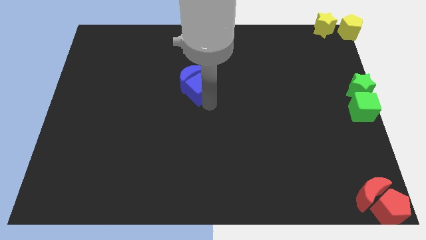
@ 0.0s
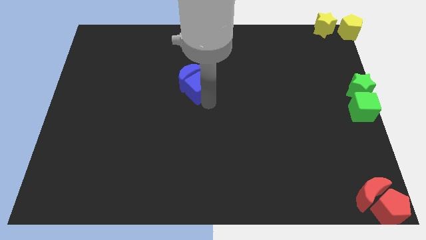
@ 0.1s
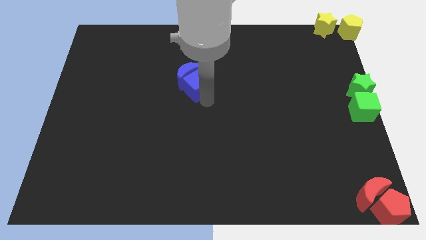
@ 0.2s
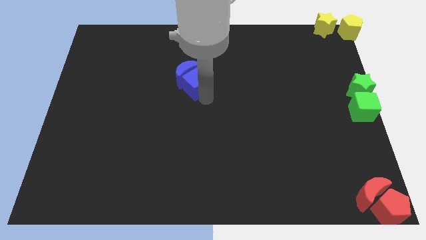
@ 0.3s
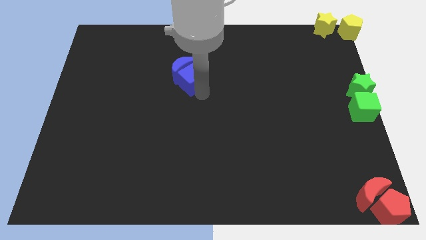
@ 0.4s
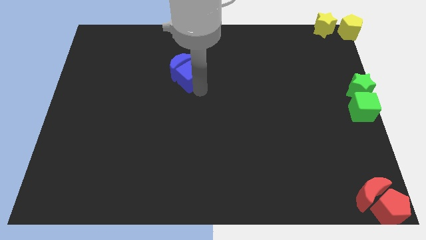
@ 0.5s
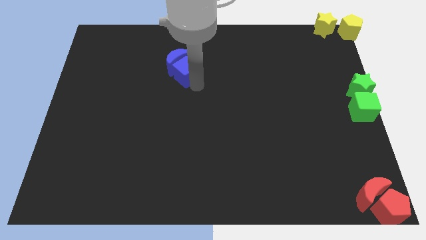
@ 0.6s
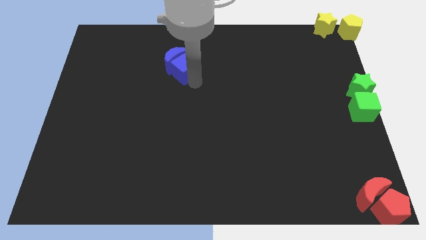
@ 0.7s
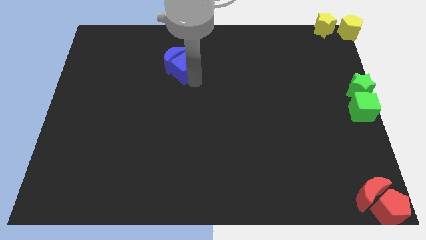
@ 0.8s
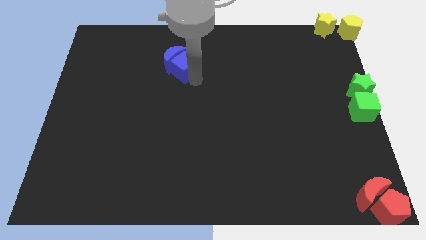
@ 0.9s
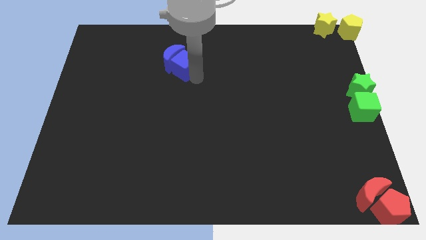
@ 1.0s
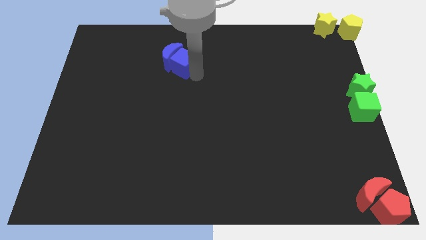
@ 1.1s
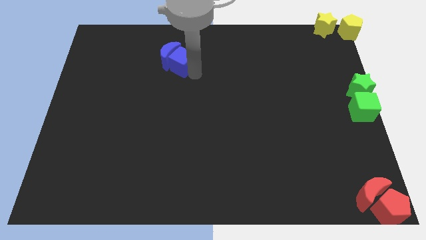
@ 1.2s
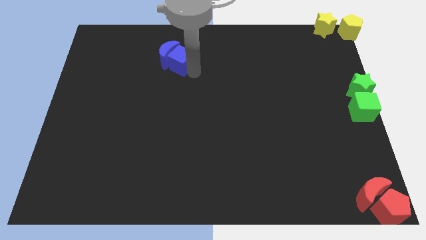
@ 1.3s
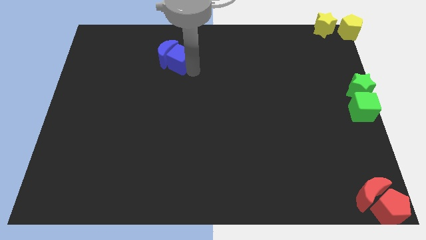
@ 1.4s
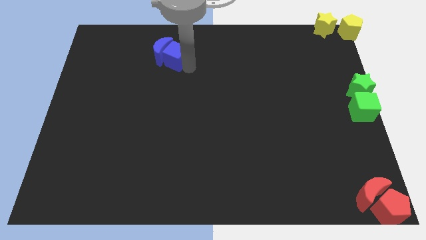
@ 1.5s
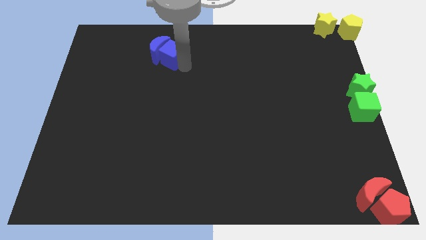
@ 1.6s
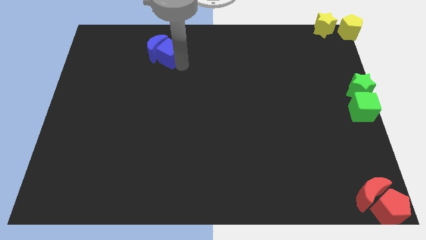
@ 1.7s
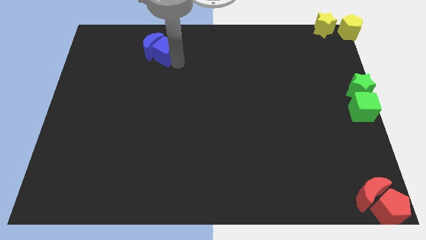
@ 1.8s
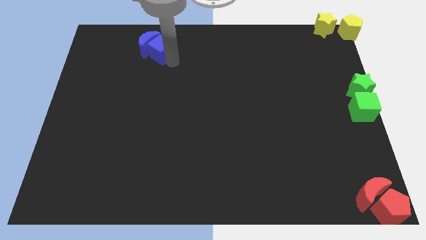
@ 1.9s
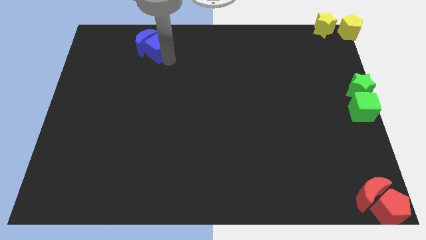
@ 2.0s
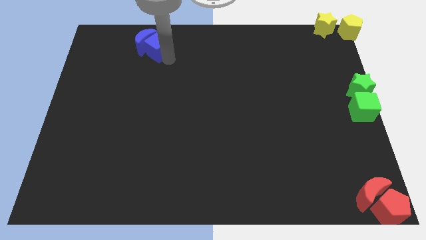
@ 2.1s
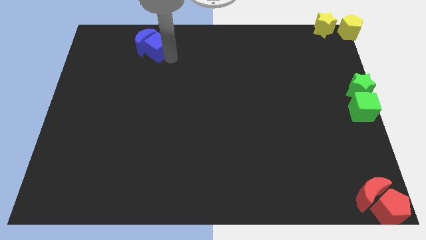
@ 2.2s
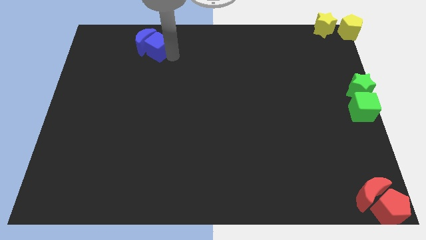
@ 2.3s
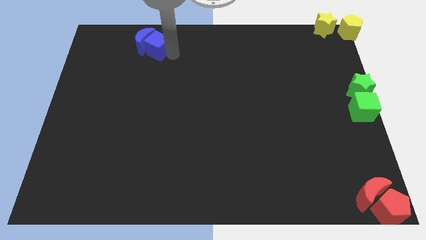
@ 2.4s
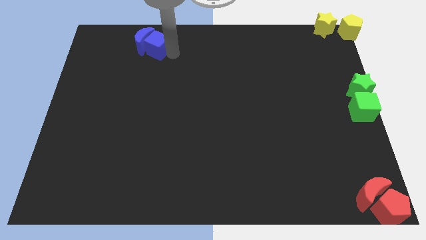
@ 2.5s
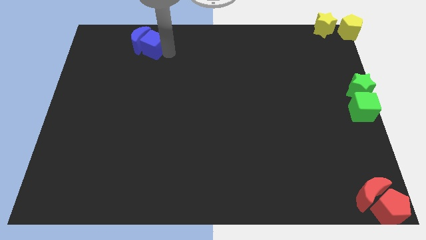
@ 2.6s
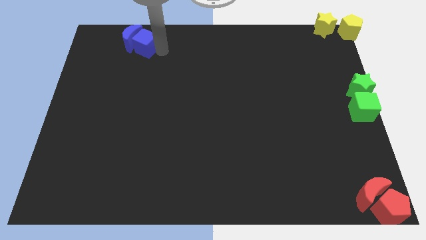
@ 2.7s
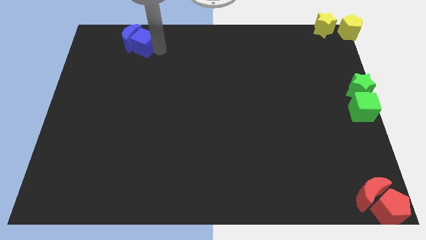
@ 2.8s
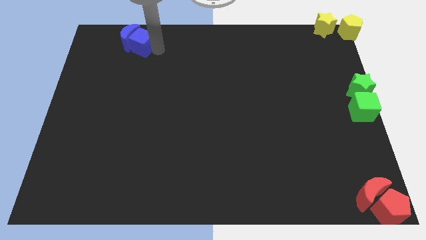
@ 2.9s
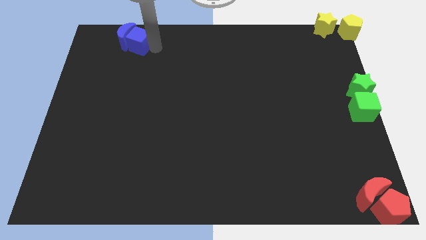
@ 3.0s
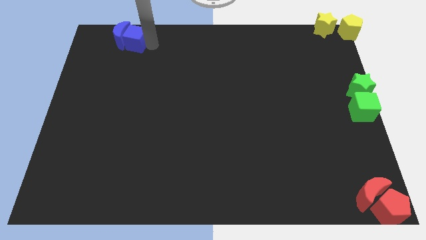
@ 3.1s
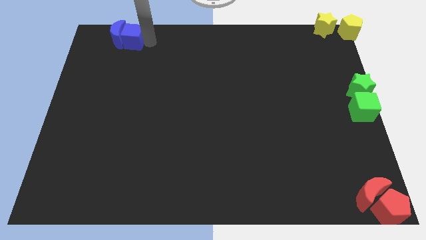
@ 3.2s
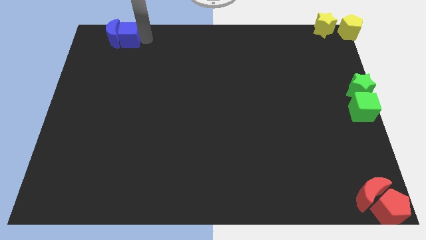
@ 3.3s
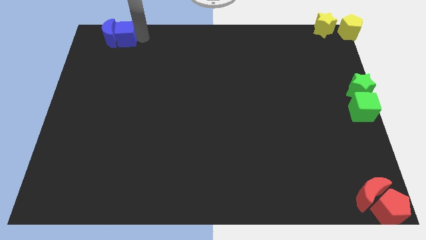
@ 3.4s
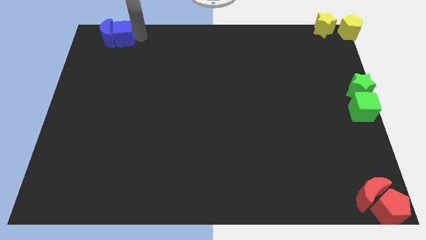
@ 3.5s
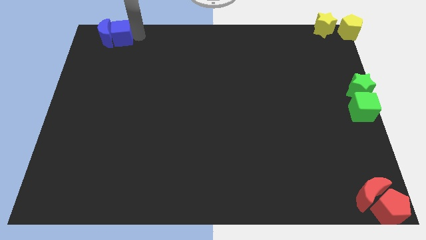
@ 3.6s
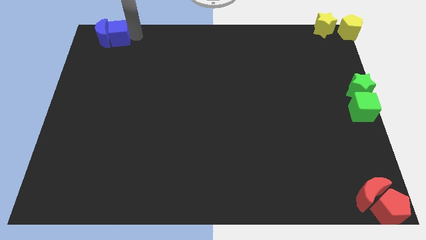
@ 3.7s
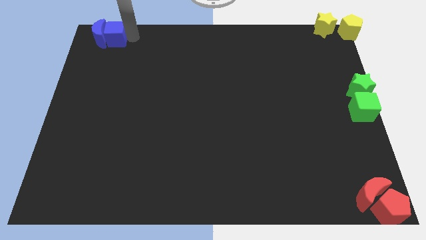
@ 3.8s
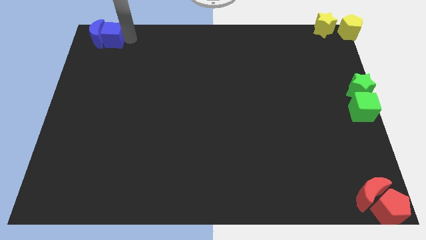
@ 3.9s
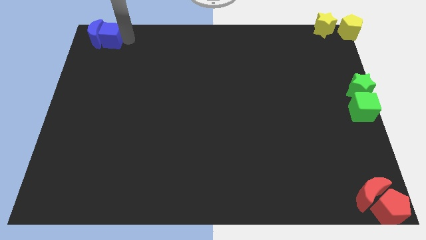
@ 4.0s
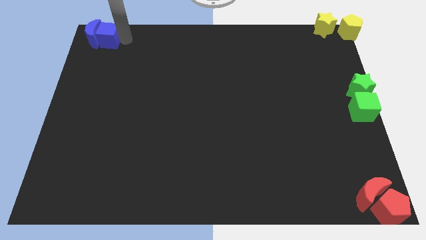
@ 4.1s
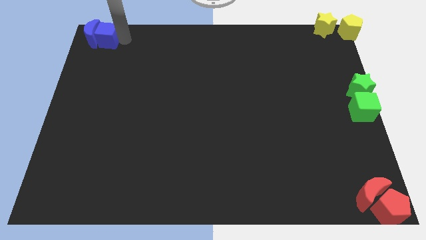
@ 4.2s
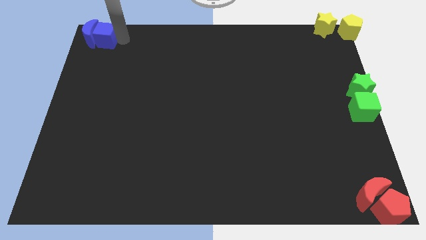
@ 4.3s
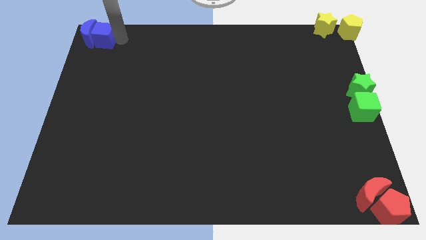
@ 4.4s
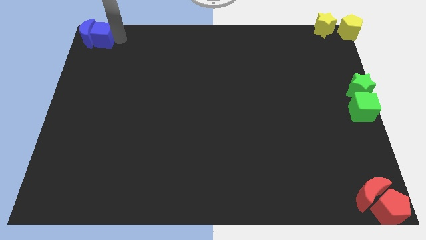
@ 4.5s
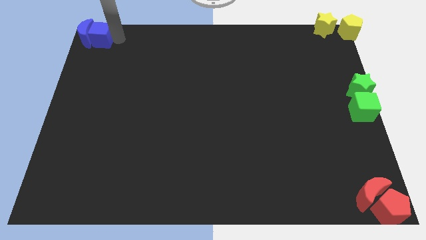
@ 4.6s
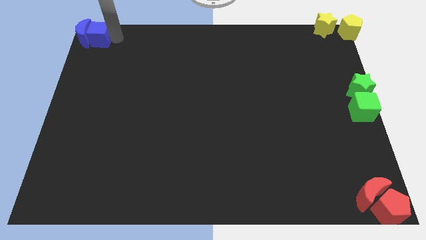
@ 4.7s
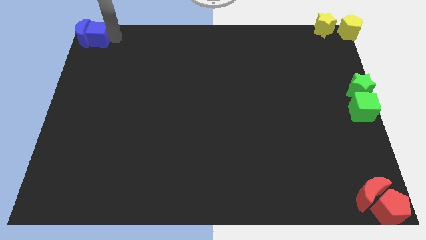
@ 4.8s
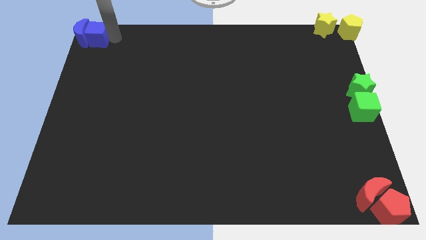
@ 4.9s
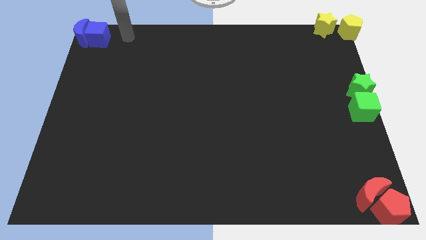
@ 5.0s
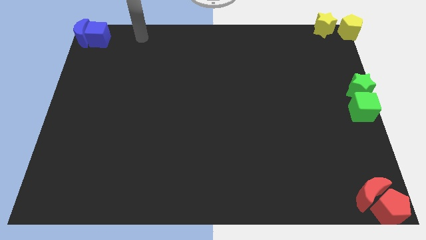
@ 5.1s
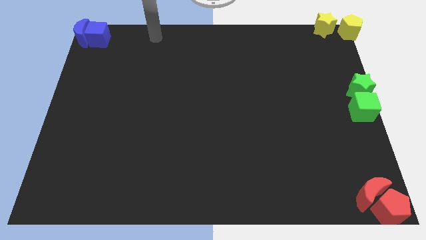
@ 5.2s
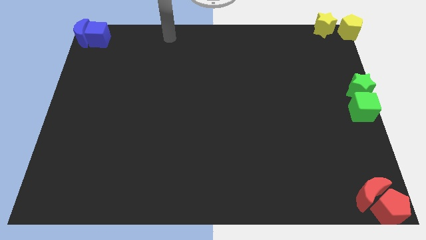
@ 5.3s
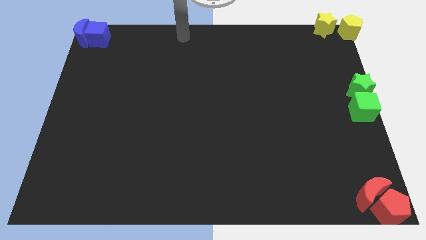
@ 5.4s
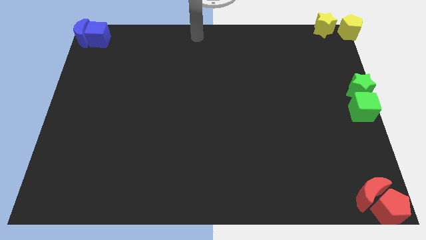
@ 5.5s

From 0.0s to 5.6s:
move the blue cube and blue crescent to the top left corner

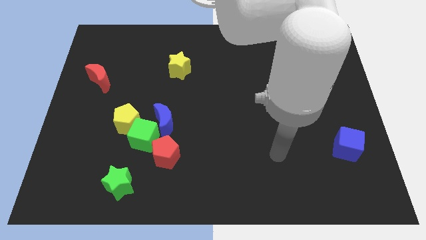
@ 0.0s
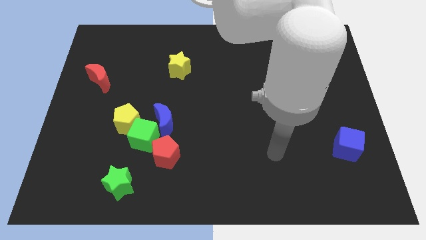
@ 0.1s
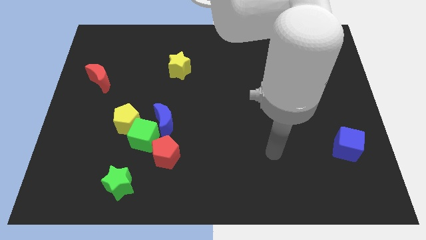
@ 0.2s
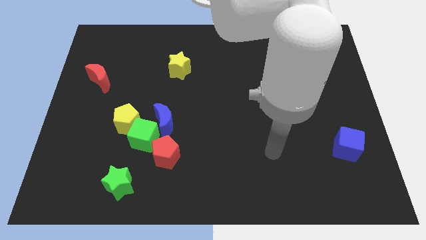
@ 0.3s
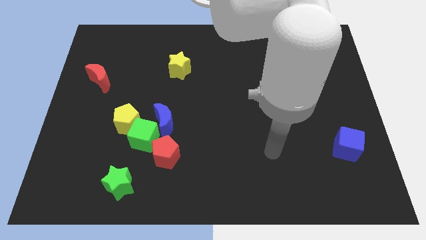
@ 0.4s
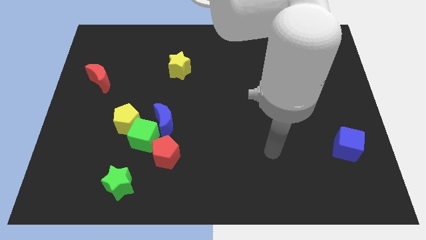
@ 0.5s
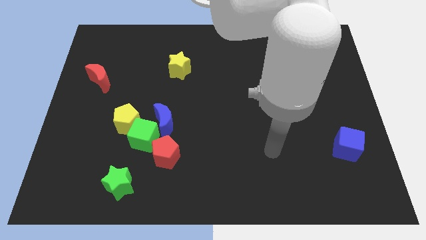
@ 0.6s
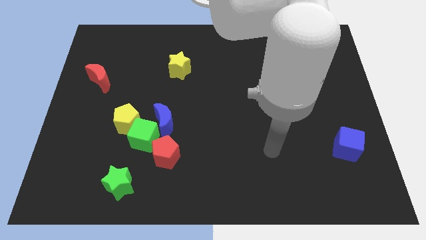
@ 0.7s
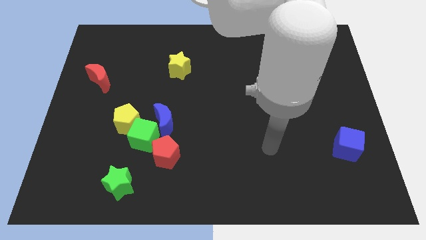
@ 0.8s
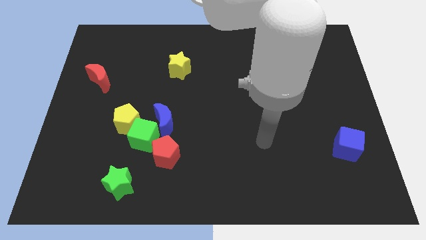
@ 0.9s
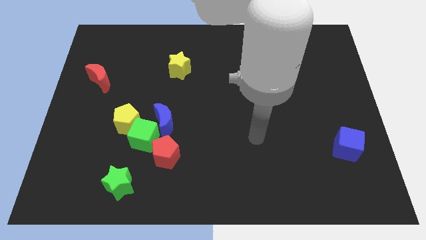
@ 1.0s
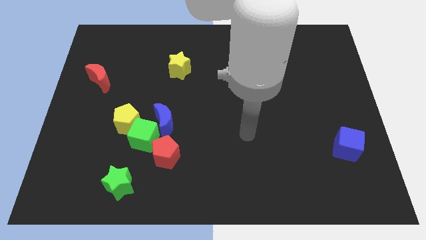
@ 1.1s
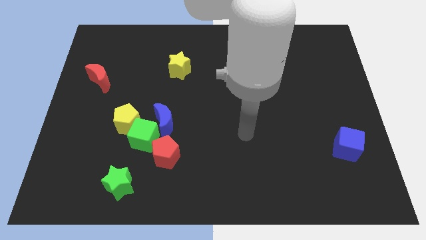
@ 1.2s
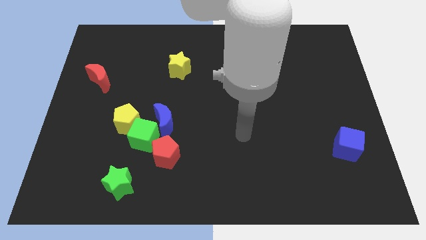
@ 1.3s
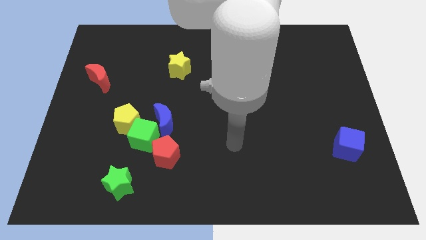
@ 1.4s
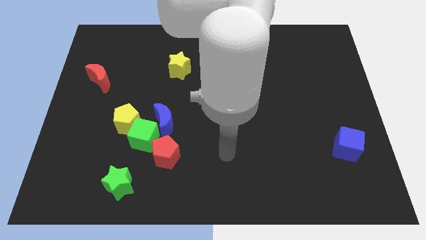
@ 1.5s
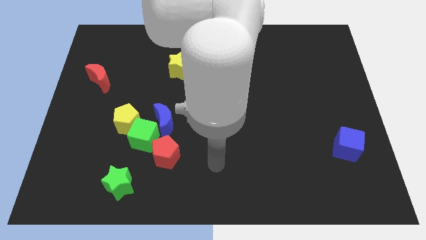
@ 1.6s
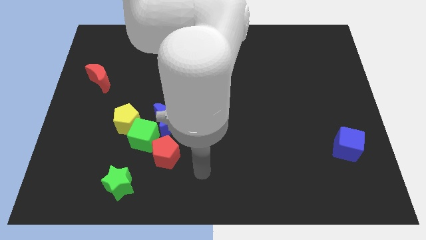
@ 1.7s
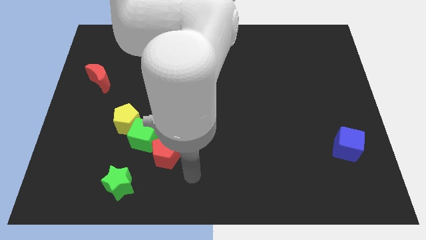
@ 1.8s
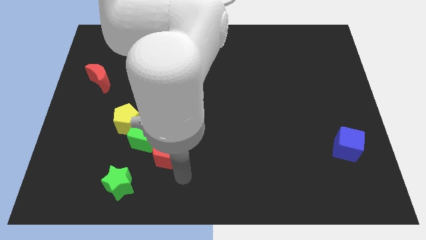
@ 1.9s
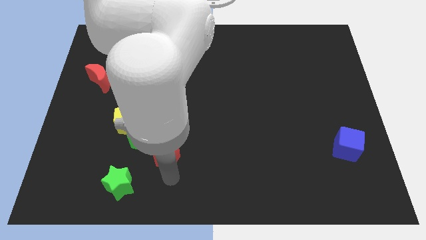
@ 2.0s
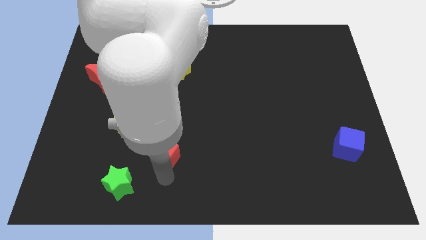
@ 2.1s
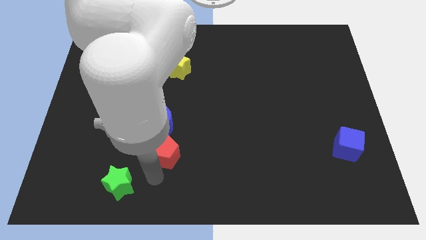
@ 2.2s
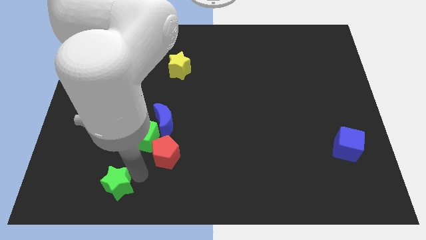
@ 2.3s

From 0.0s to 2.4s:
place the arm to the right of the green star

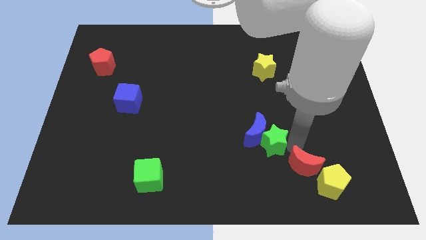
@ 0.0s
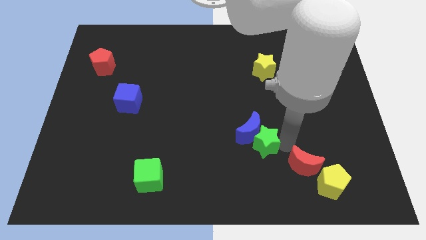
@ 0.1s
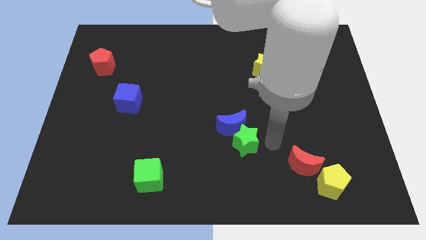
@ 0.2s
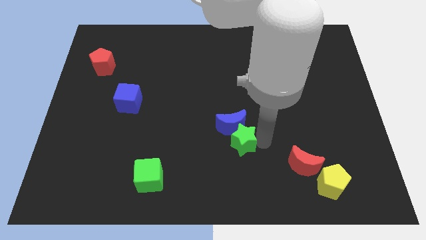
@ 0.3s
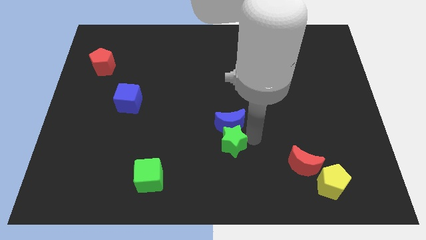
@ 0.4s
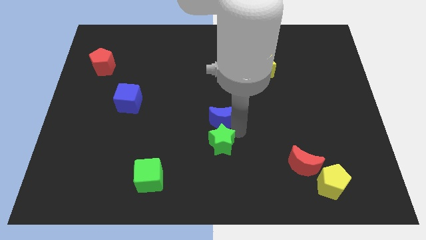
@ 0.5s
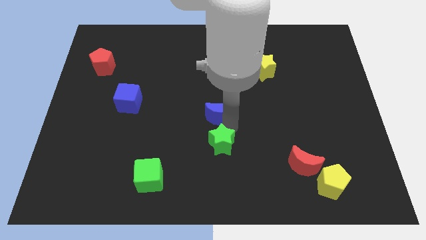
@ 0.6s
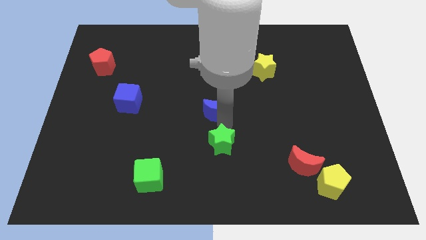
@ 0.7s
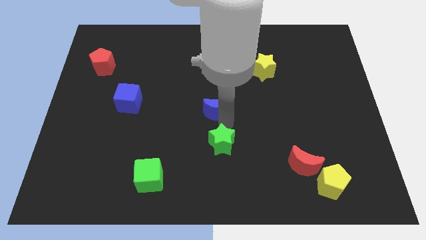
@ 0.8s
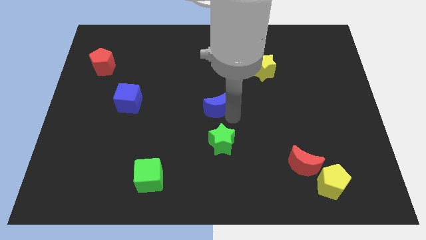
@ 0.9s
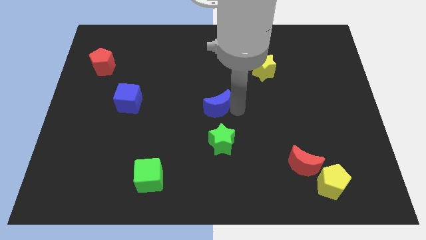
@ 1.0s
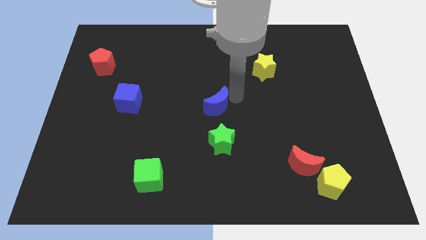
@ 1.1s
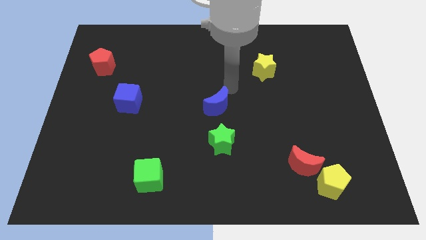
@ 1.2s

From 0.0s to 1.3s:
slide the blue moon and the green star slightly to the left
